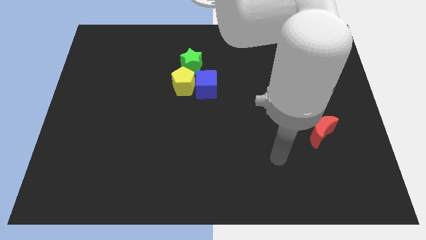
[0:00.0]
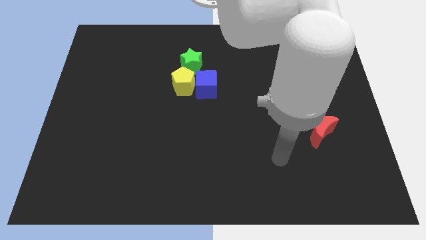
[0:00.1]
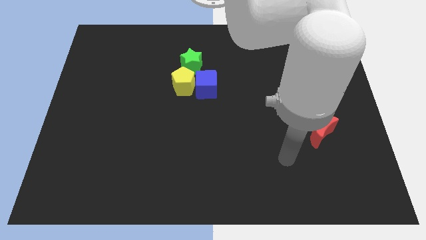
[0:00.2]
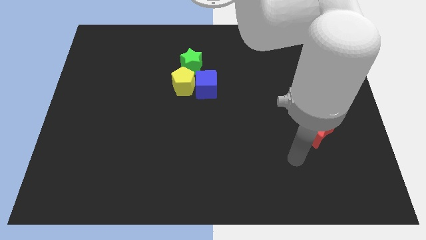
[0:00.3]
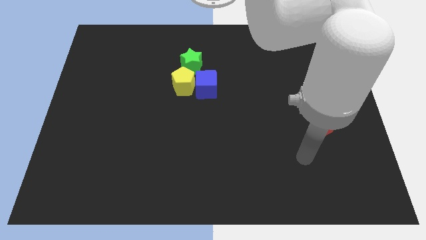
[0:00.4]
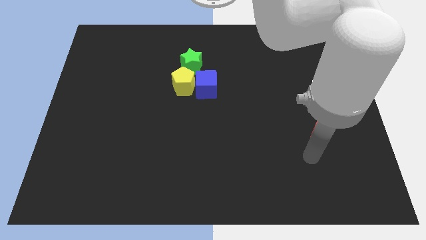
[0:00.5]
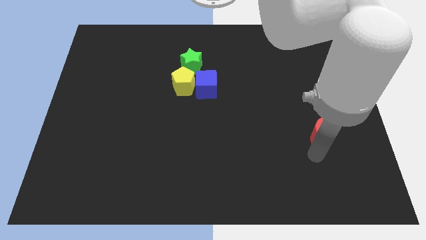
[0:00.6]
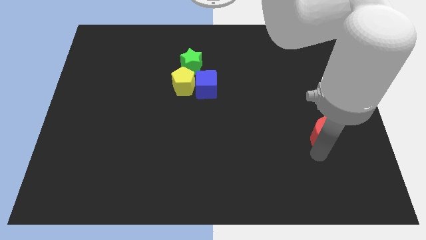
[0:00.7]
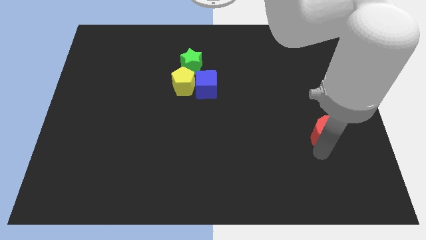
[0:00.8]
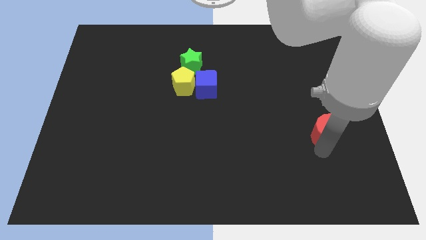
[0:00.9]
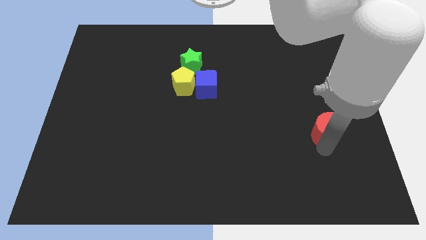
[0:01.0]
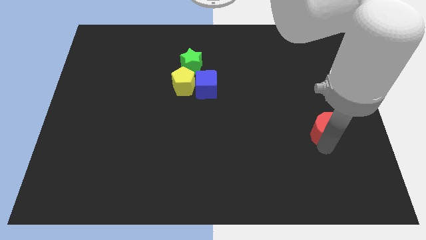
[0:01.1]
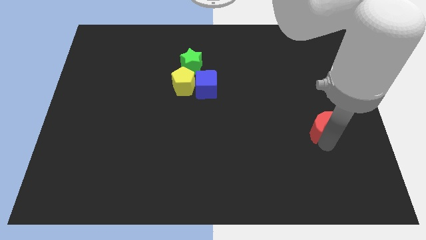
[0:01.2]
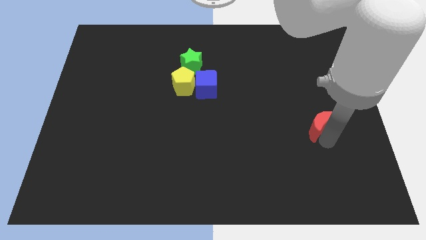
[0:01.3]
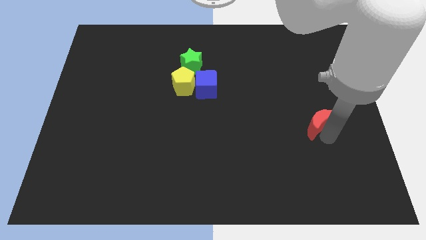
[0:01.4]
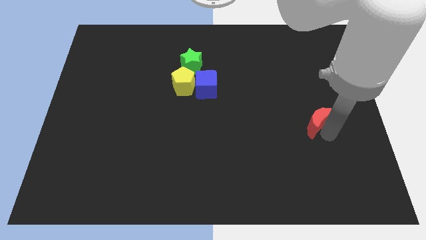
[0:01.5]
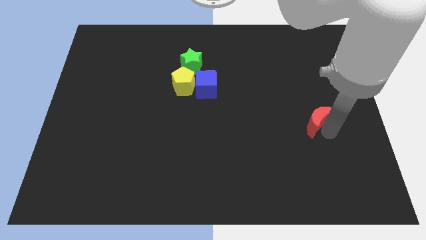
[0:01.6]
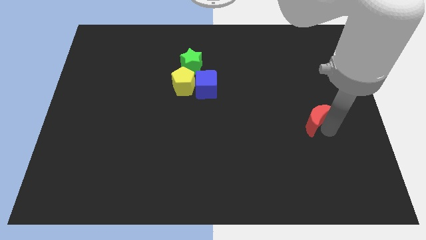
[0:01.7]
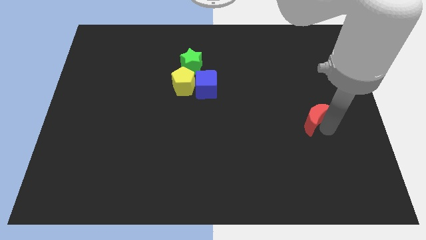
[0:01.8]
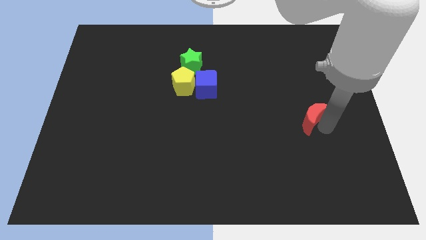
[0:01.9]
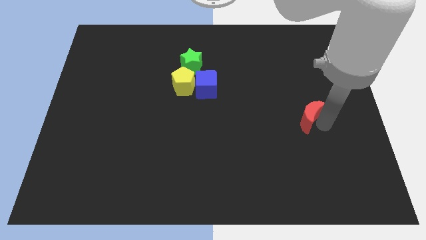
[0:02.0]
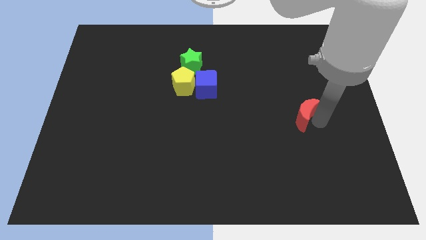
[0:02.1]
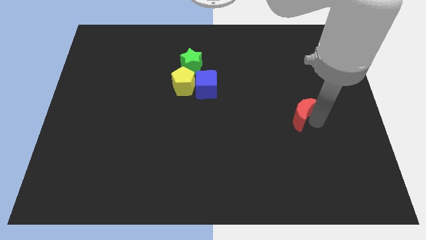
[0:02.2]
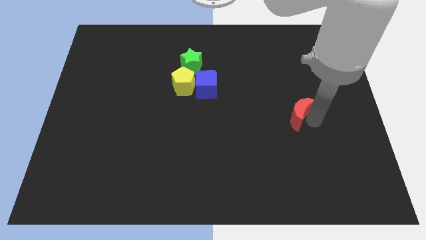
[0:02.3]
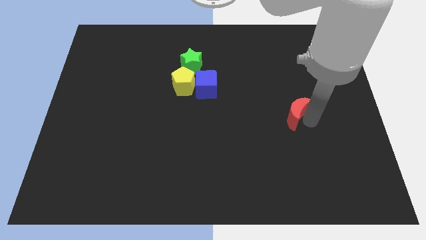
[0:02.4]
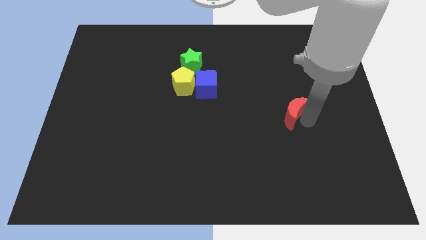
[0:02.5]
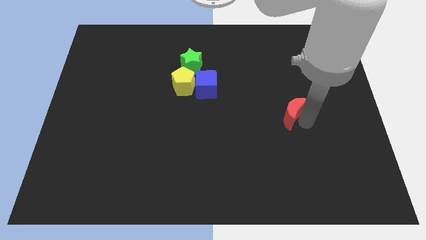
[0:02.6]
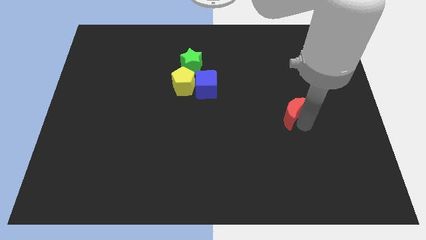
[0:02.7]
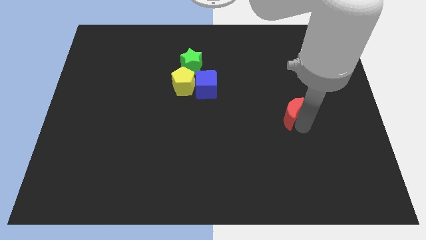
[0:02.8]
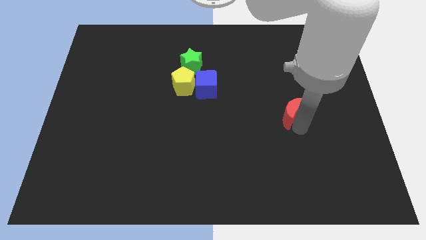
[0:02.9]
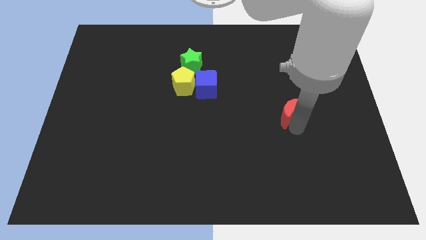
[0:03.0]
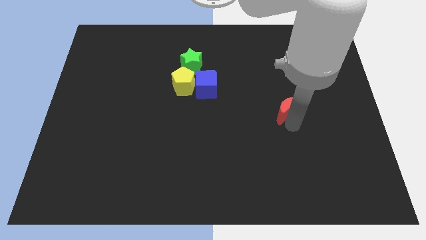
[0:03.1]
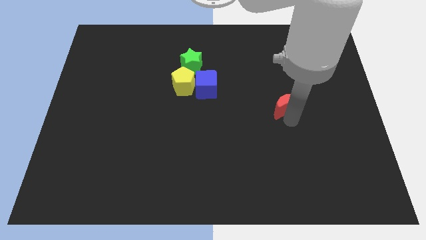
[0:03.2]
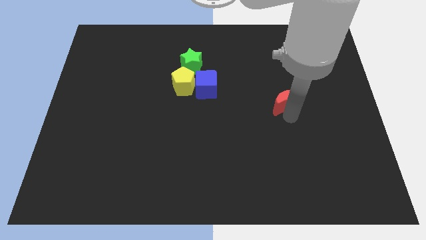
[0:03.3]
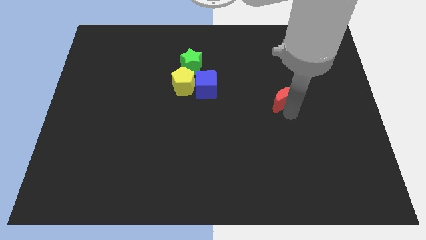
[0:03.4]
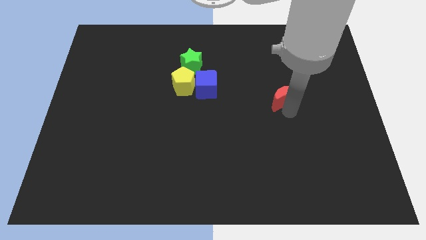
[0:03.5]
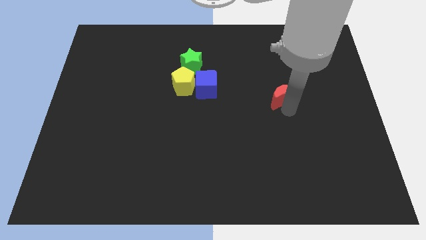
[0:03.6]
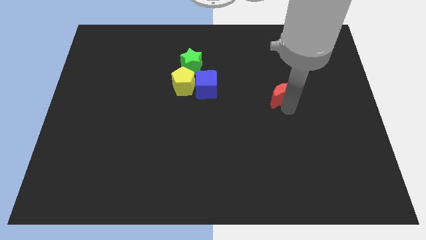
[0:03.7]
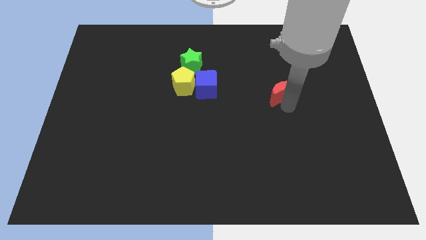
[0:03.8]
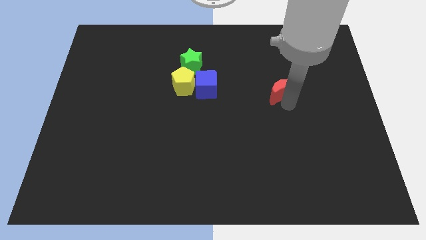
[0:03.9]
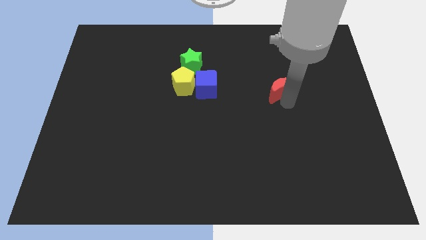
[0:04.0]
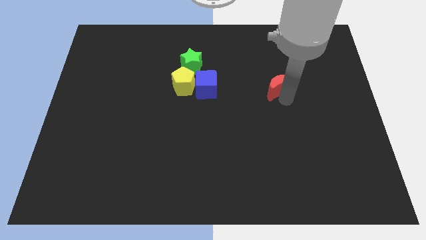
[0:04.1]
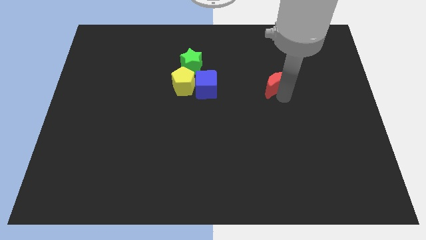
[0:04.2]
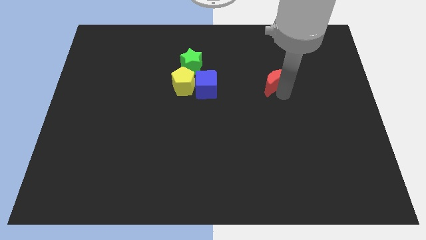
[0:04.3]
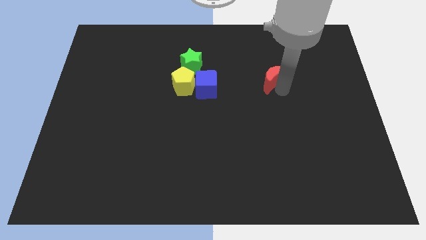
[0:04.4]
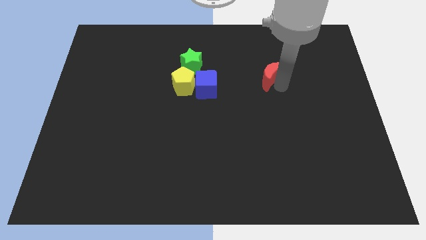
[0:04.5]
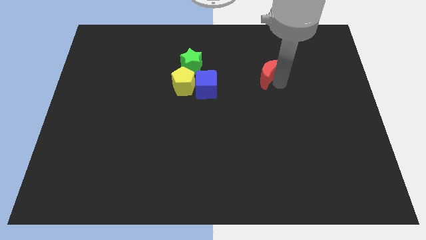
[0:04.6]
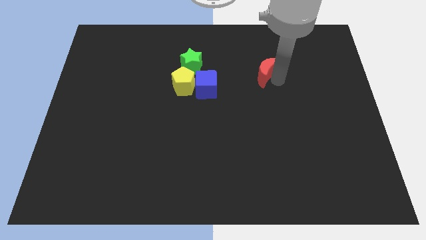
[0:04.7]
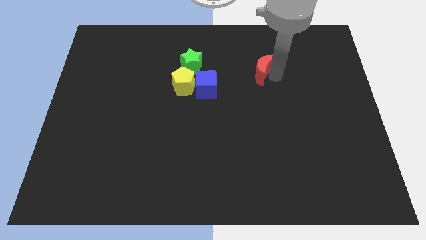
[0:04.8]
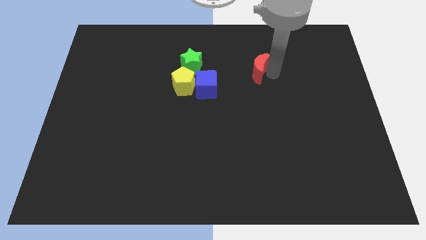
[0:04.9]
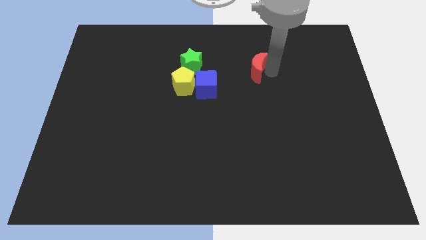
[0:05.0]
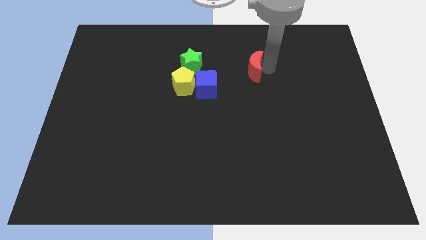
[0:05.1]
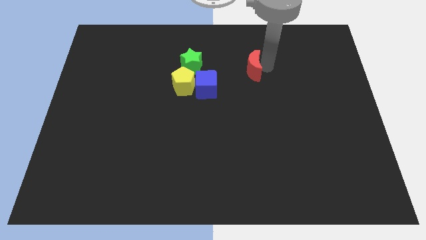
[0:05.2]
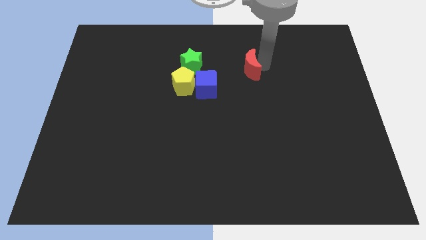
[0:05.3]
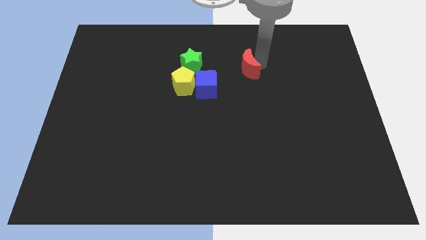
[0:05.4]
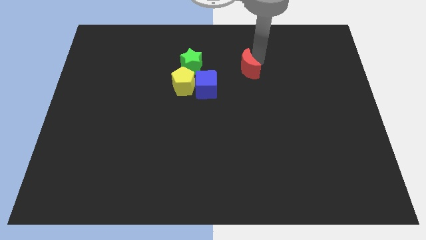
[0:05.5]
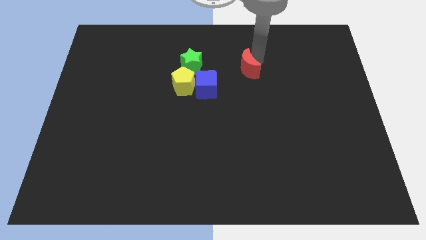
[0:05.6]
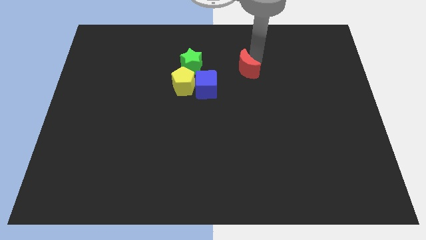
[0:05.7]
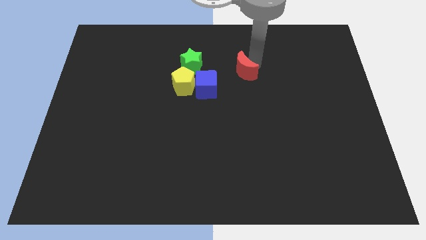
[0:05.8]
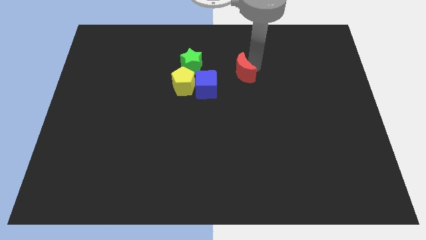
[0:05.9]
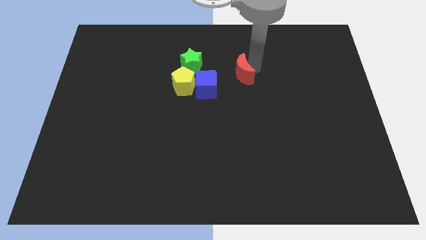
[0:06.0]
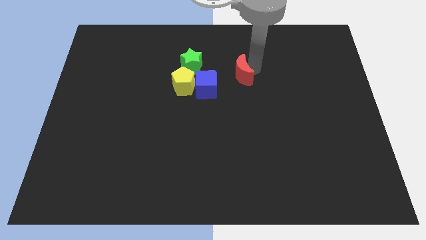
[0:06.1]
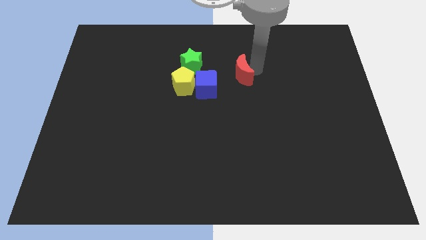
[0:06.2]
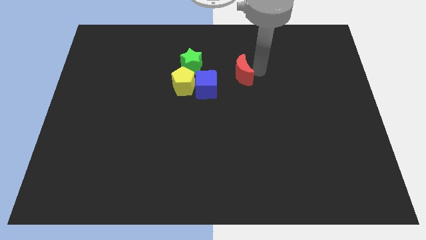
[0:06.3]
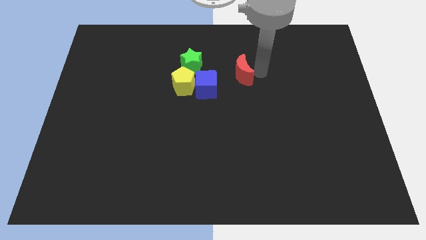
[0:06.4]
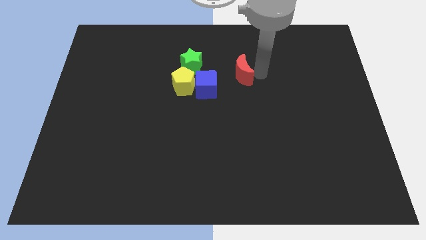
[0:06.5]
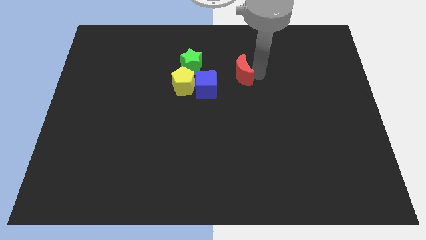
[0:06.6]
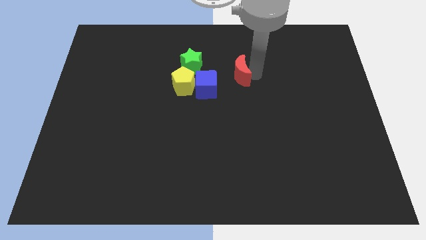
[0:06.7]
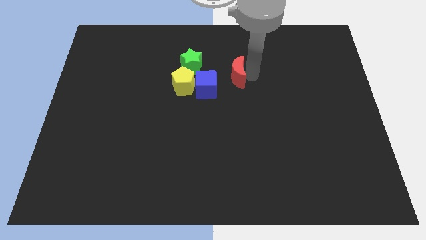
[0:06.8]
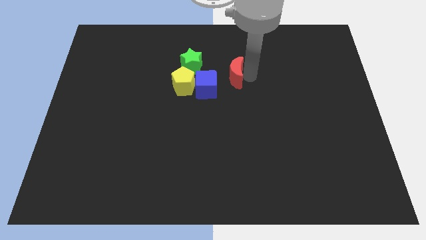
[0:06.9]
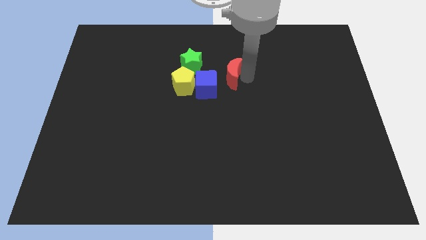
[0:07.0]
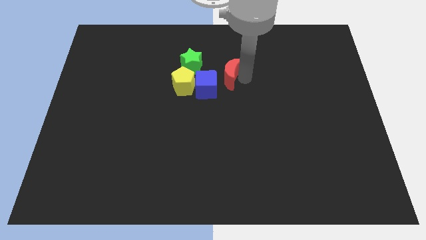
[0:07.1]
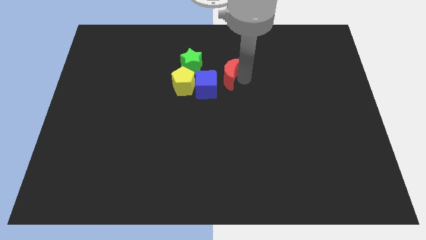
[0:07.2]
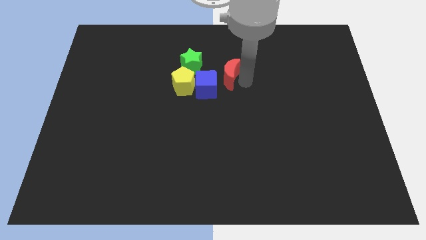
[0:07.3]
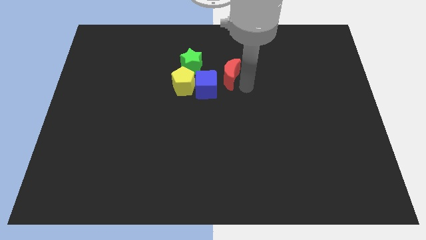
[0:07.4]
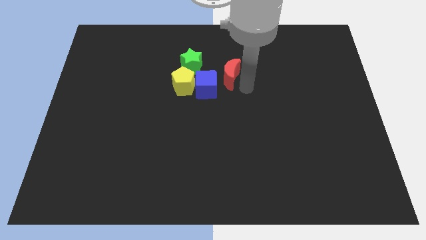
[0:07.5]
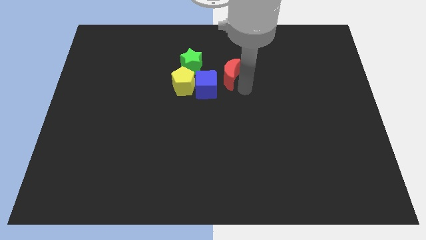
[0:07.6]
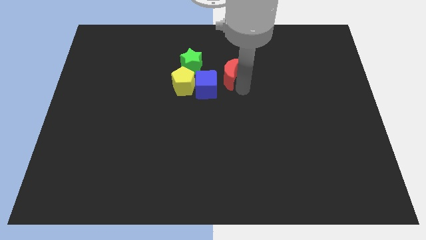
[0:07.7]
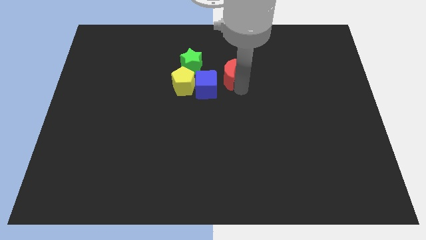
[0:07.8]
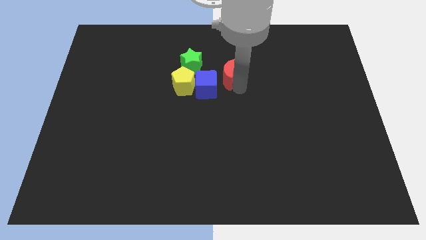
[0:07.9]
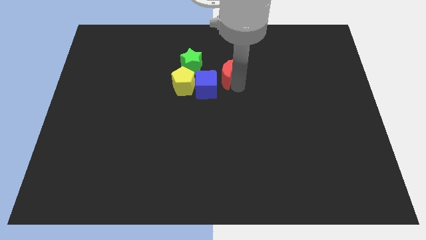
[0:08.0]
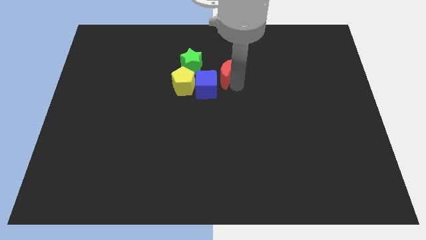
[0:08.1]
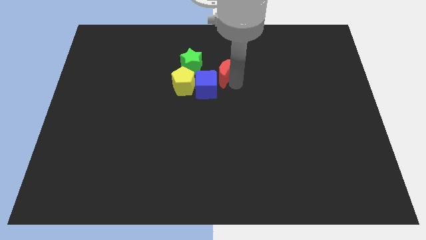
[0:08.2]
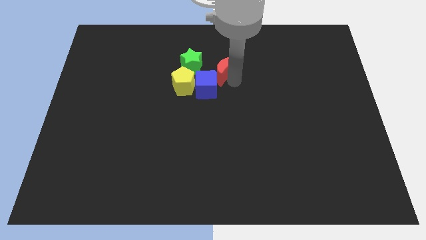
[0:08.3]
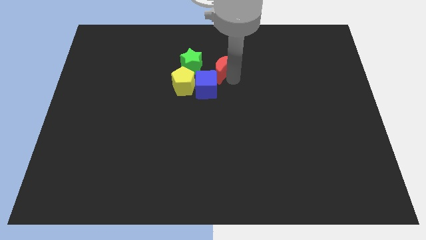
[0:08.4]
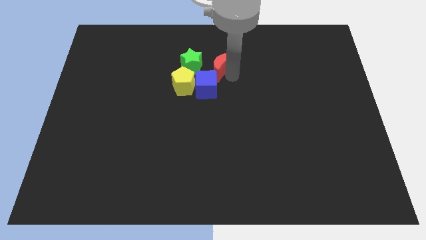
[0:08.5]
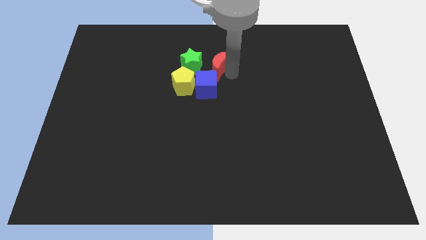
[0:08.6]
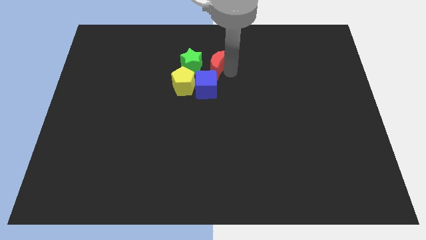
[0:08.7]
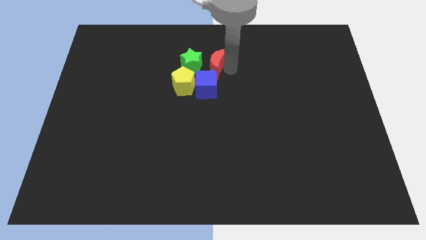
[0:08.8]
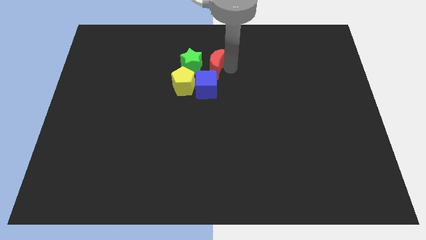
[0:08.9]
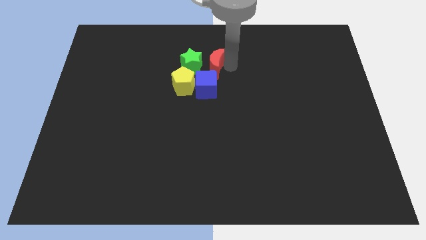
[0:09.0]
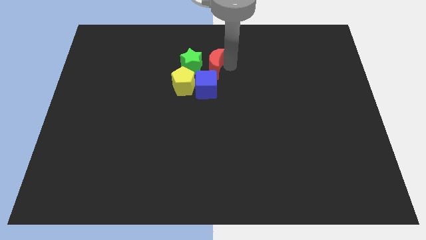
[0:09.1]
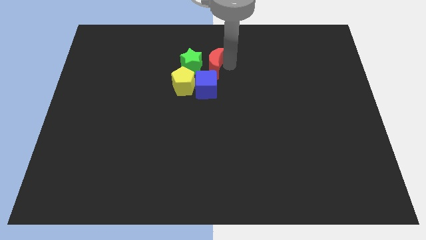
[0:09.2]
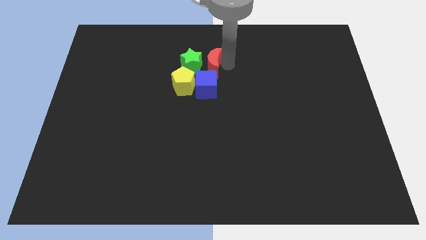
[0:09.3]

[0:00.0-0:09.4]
slide the moon next to the green star
